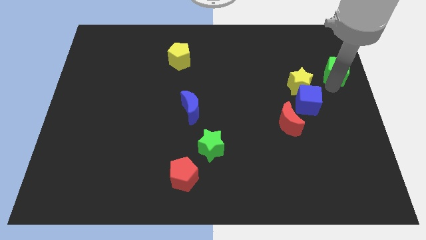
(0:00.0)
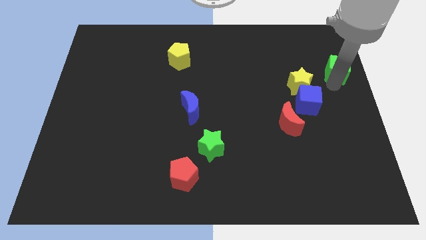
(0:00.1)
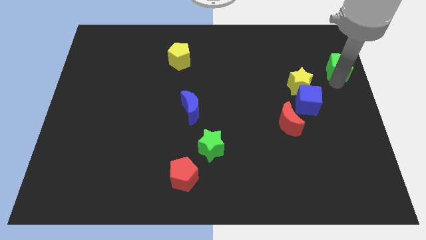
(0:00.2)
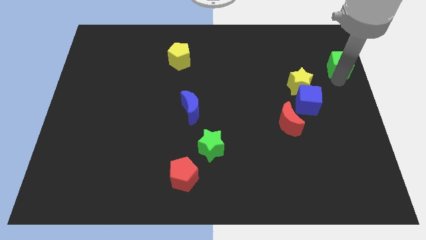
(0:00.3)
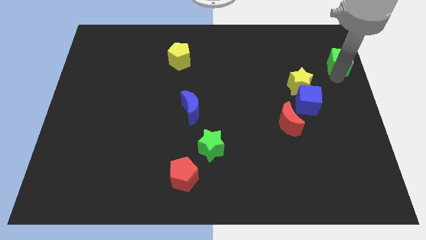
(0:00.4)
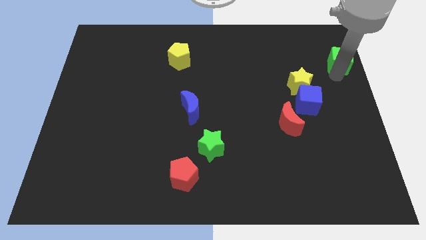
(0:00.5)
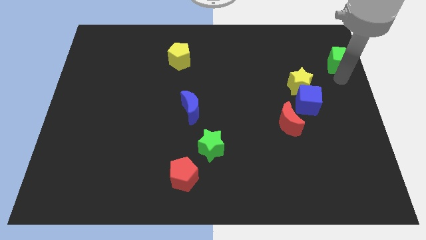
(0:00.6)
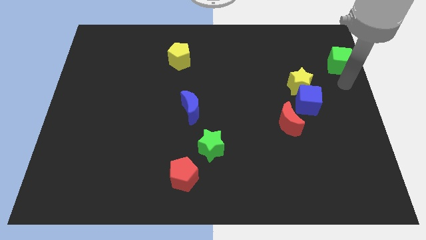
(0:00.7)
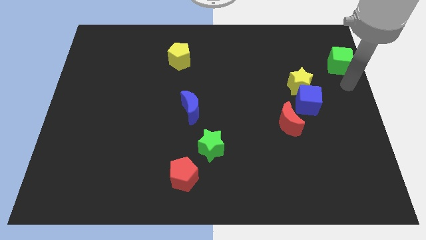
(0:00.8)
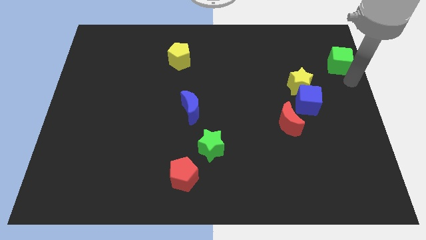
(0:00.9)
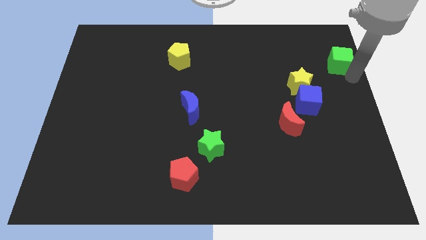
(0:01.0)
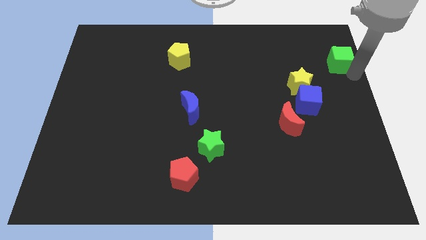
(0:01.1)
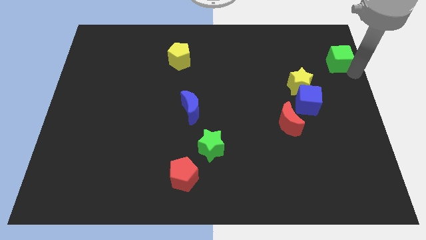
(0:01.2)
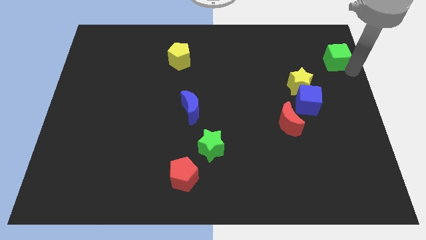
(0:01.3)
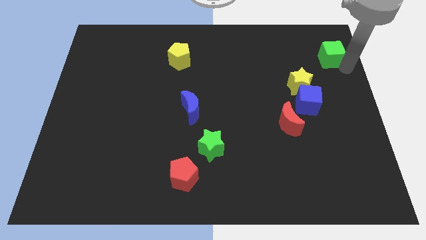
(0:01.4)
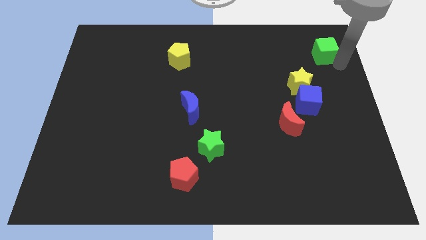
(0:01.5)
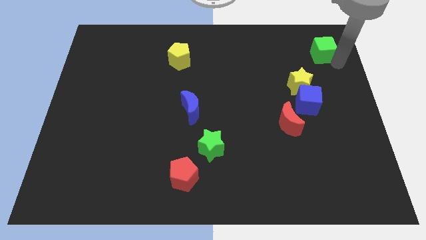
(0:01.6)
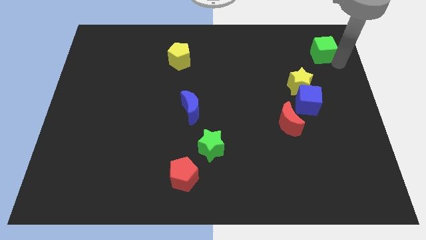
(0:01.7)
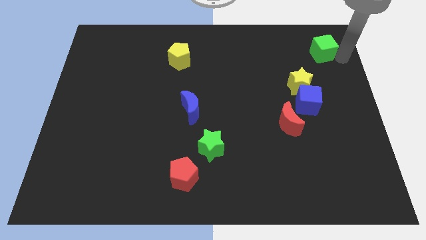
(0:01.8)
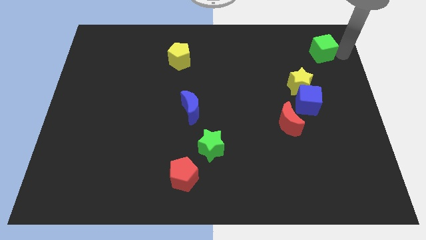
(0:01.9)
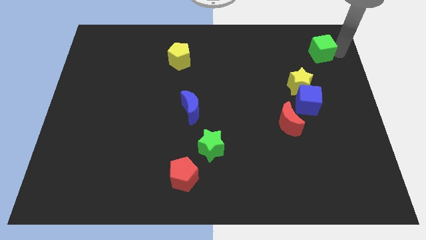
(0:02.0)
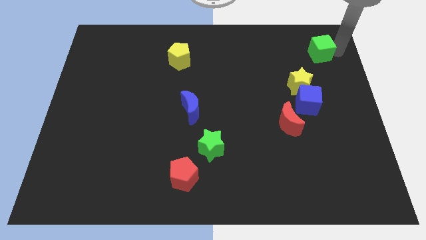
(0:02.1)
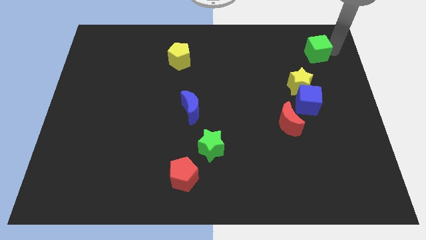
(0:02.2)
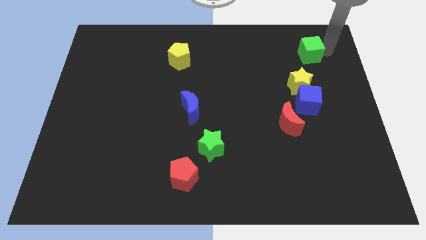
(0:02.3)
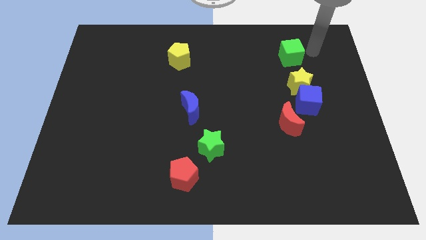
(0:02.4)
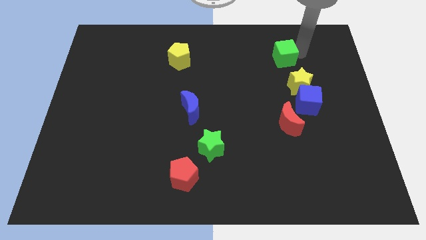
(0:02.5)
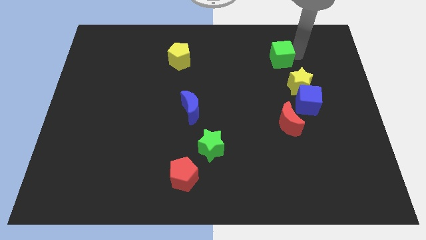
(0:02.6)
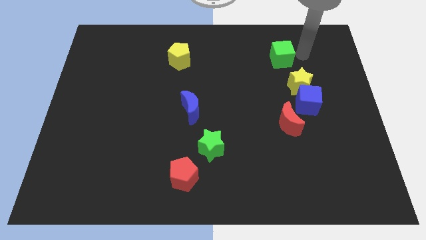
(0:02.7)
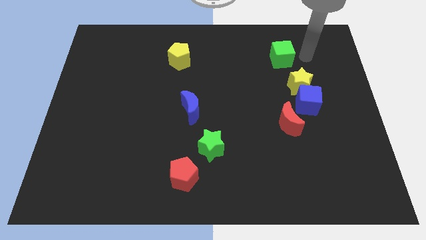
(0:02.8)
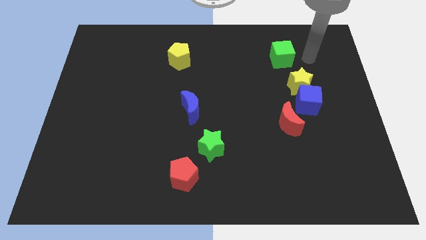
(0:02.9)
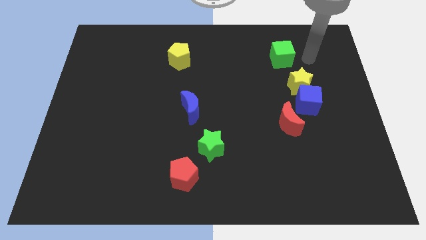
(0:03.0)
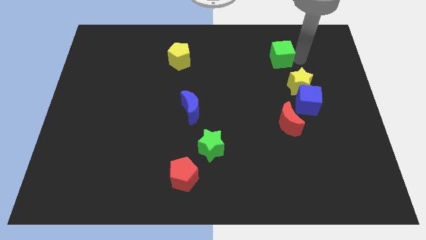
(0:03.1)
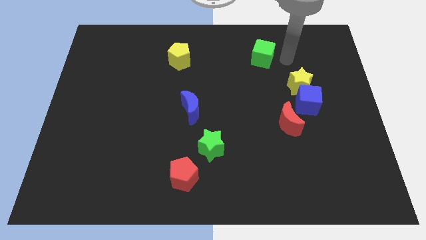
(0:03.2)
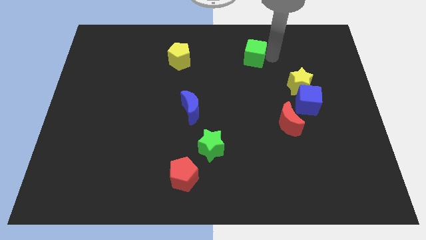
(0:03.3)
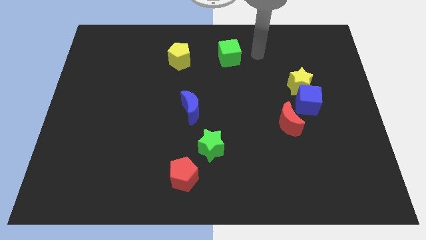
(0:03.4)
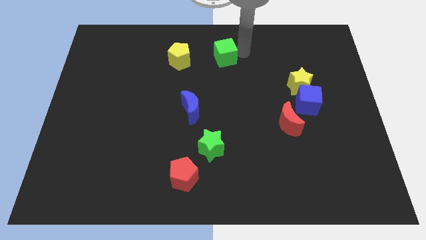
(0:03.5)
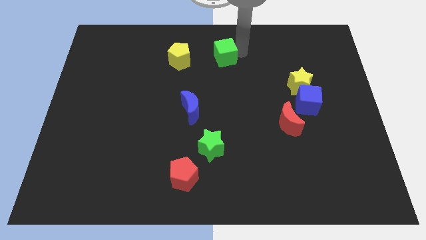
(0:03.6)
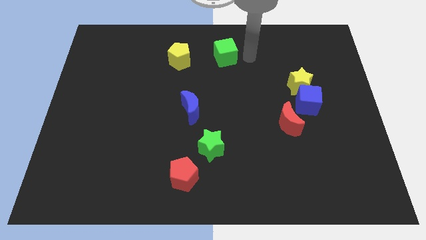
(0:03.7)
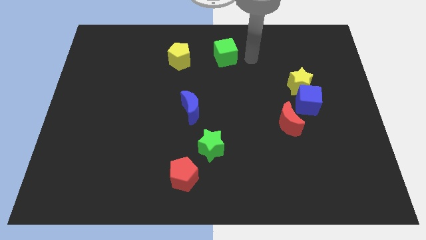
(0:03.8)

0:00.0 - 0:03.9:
move green cube to top center of the board

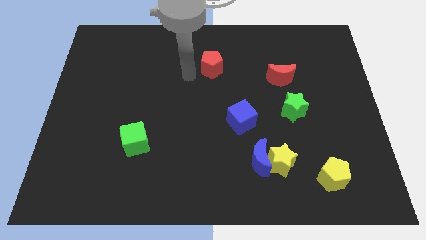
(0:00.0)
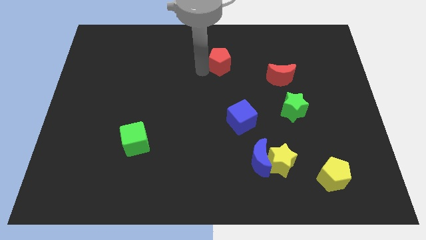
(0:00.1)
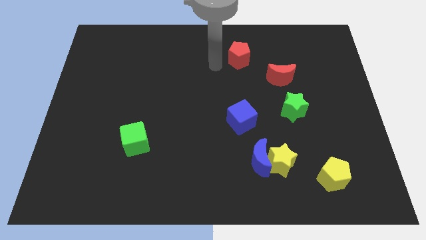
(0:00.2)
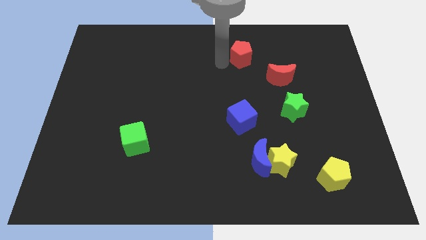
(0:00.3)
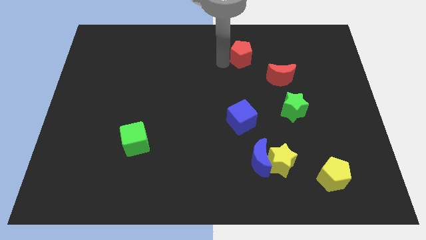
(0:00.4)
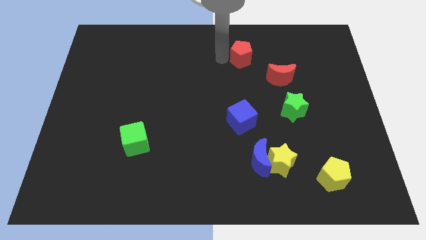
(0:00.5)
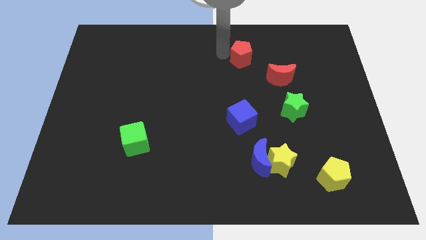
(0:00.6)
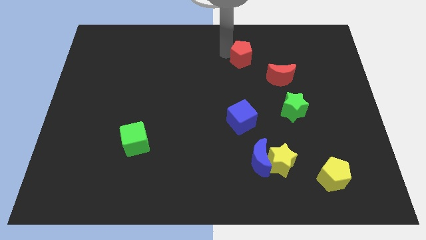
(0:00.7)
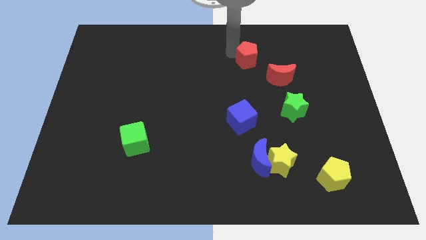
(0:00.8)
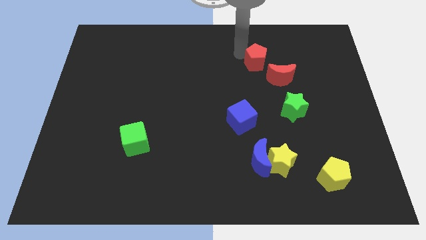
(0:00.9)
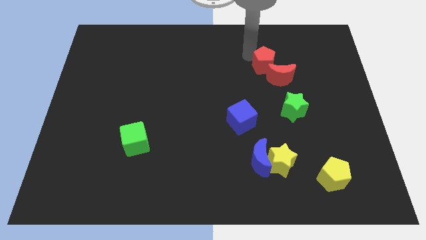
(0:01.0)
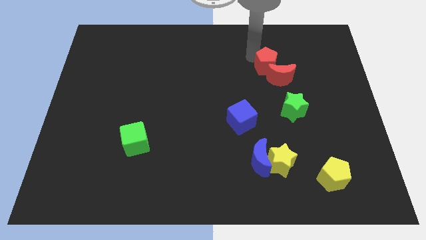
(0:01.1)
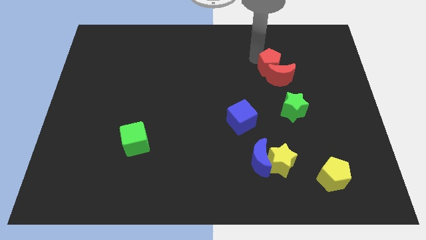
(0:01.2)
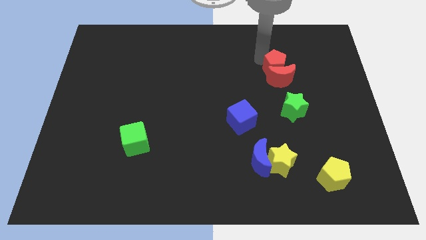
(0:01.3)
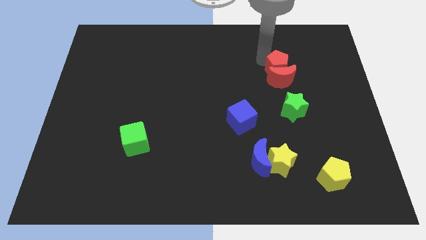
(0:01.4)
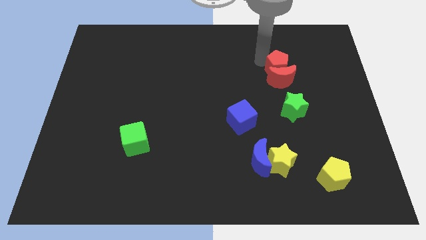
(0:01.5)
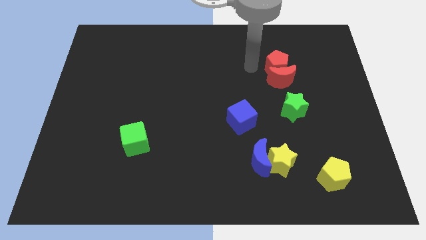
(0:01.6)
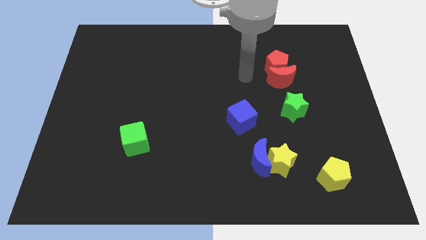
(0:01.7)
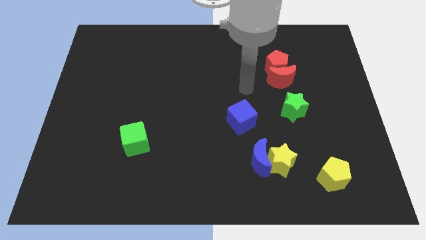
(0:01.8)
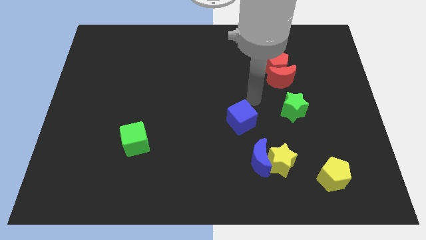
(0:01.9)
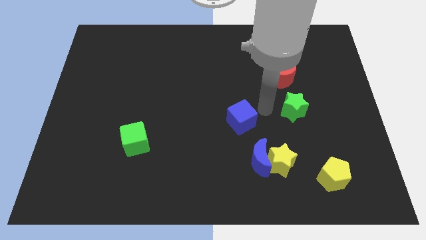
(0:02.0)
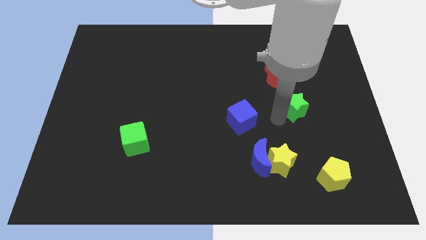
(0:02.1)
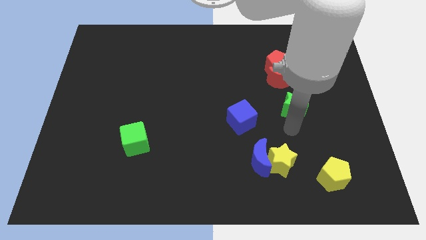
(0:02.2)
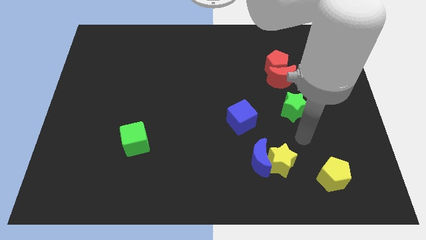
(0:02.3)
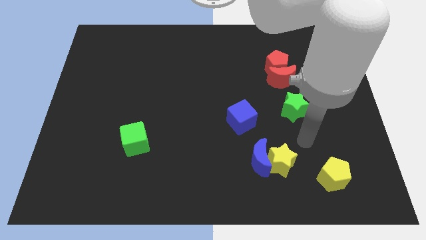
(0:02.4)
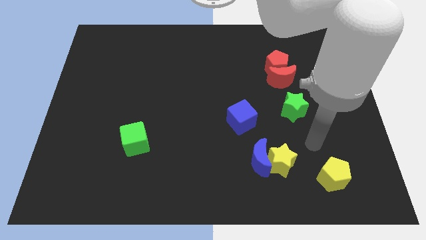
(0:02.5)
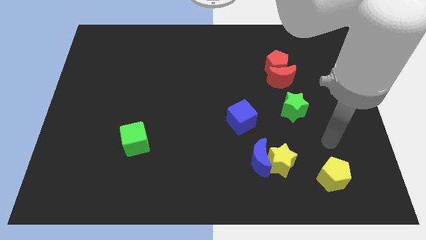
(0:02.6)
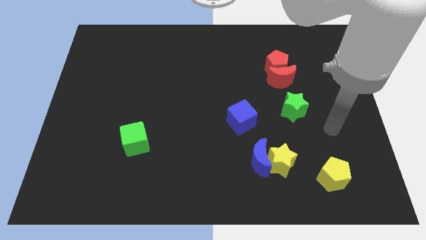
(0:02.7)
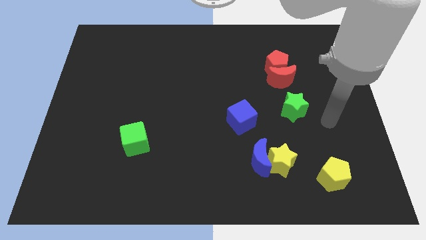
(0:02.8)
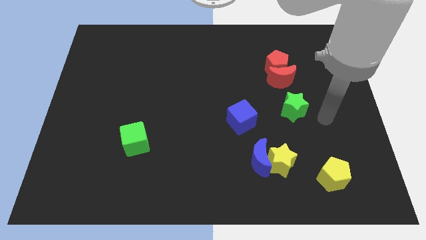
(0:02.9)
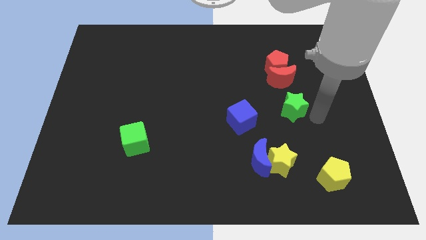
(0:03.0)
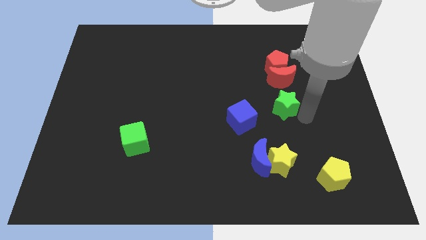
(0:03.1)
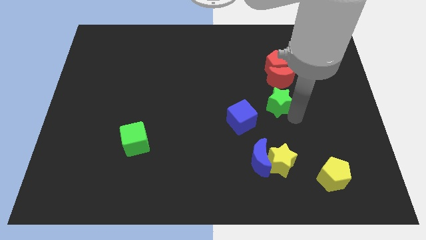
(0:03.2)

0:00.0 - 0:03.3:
move the red pentagon and green star vertical to red crescent

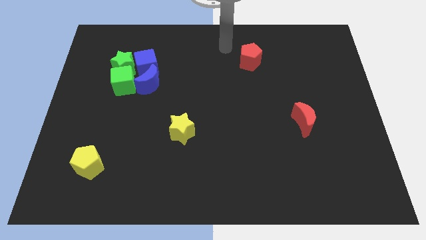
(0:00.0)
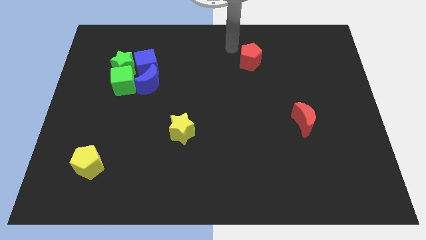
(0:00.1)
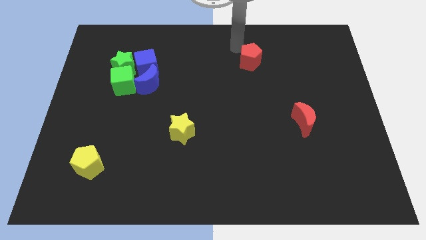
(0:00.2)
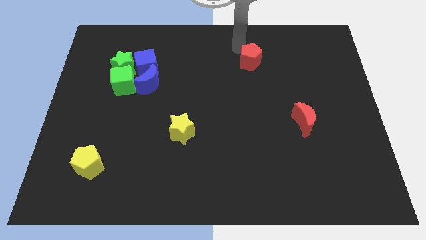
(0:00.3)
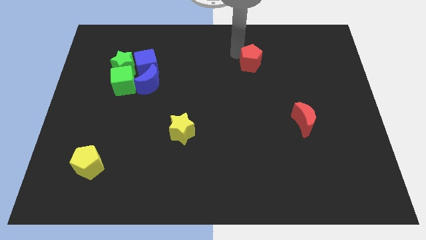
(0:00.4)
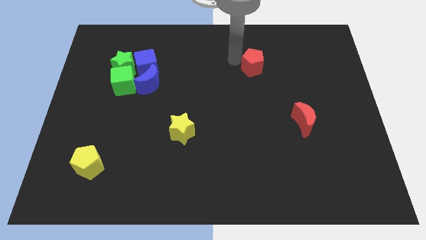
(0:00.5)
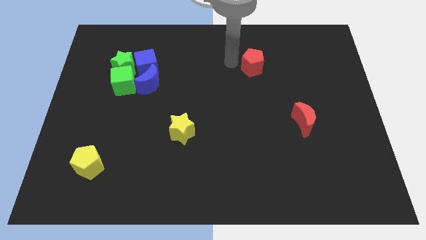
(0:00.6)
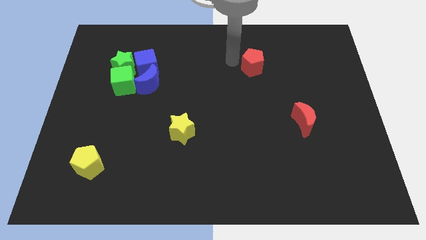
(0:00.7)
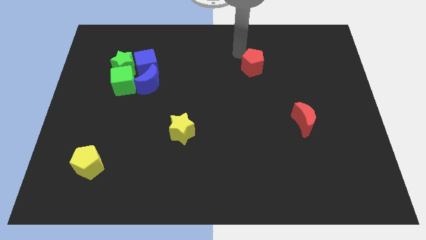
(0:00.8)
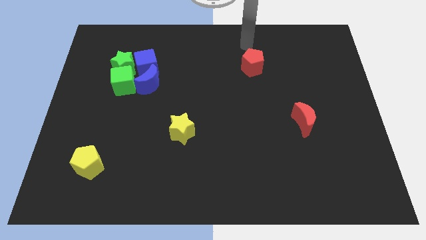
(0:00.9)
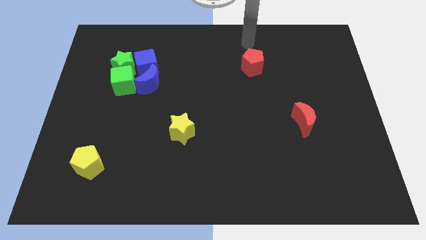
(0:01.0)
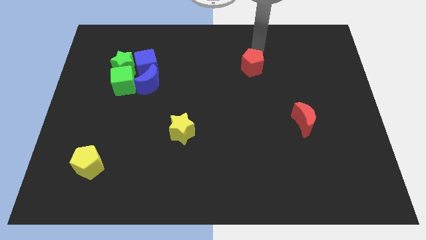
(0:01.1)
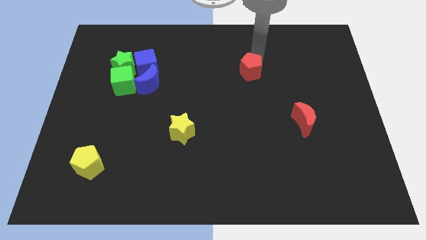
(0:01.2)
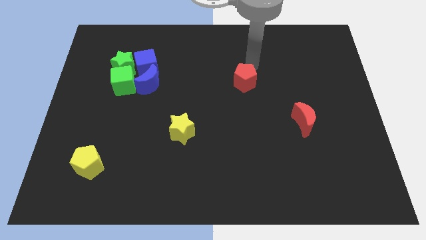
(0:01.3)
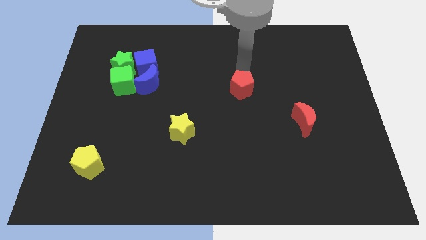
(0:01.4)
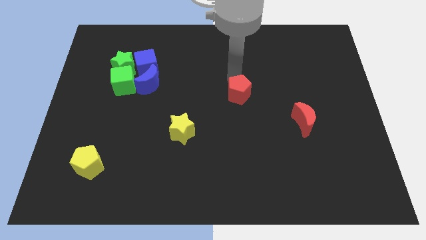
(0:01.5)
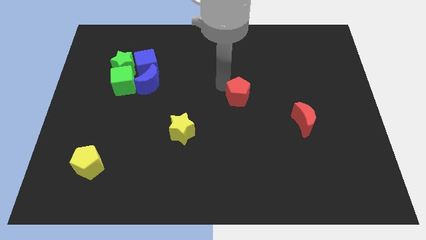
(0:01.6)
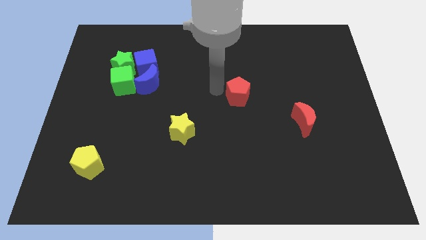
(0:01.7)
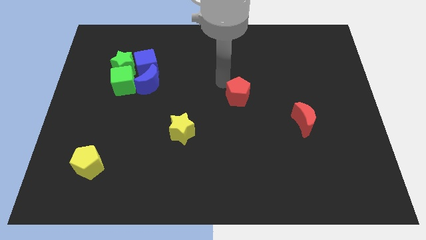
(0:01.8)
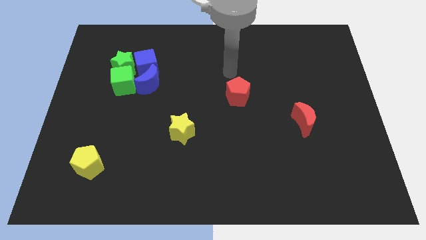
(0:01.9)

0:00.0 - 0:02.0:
place the red pentagon diagonal to the yellow star
